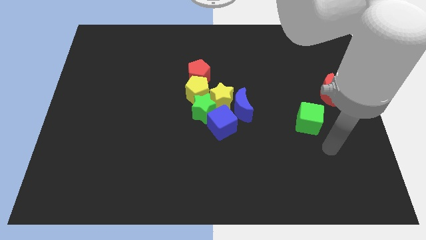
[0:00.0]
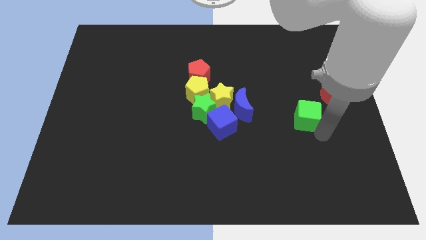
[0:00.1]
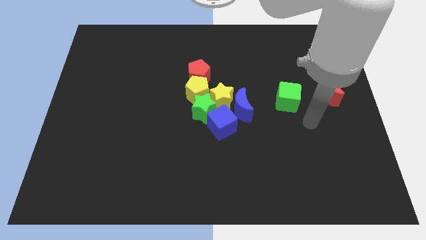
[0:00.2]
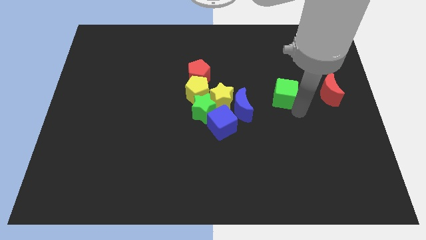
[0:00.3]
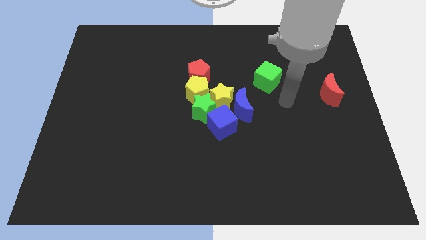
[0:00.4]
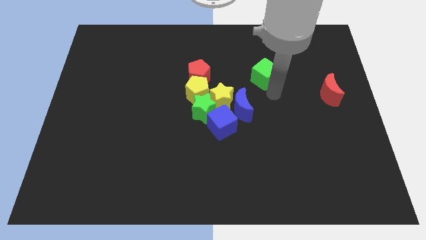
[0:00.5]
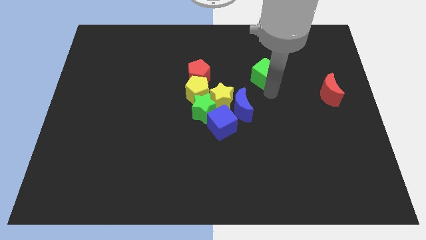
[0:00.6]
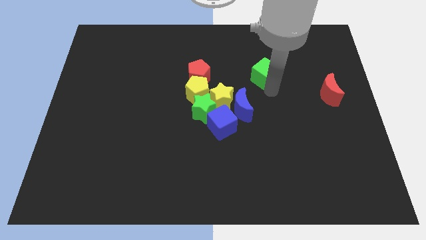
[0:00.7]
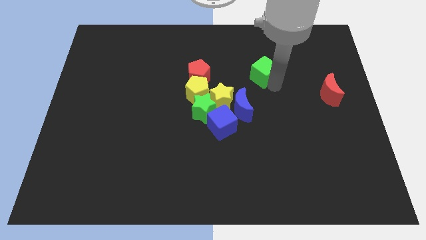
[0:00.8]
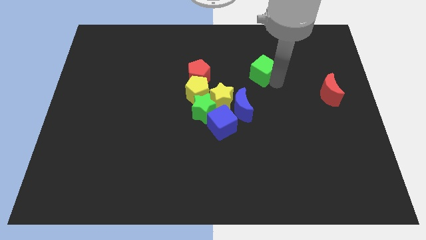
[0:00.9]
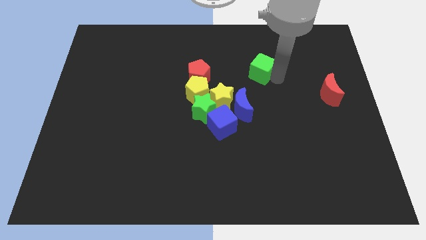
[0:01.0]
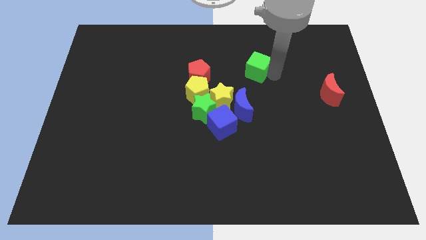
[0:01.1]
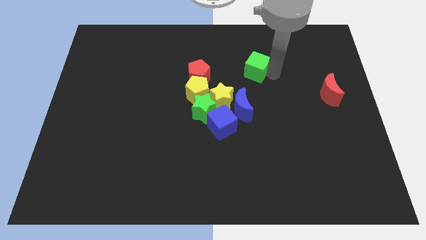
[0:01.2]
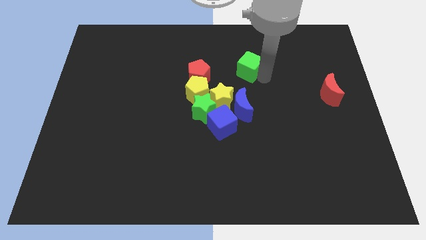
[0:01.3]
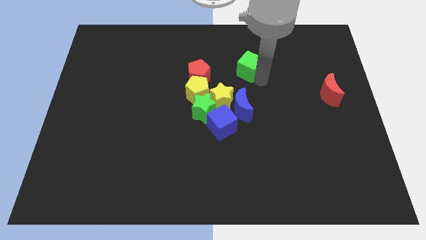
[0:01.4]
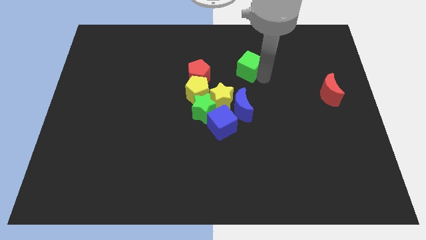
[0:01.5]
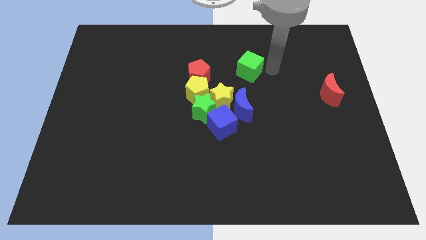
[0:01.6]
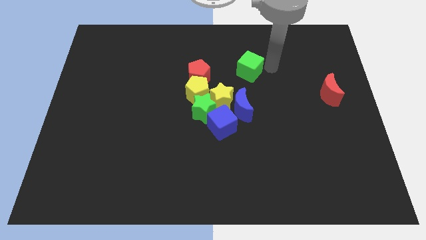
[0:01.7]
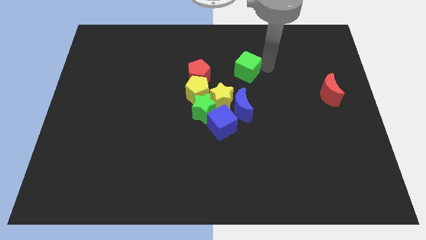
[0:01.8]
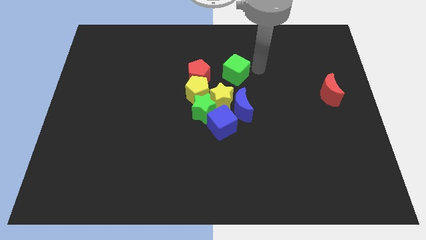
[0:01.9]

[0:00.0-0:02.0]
move the green cube to the center of the board

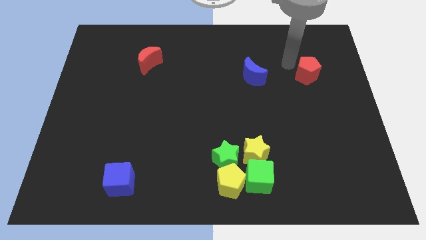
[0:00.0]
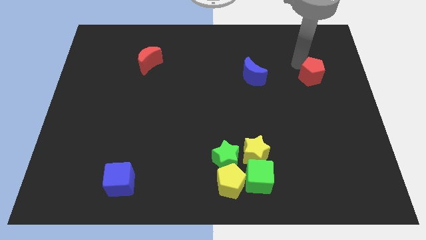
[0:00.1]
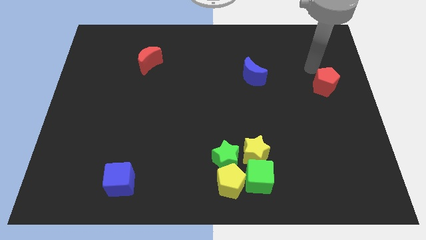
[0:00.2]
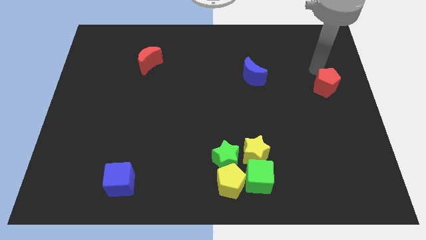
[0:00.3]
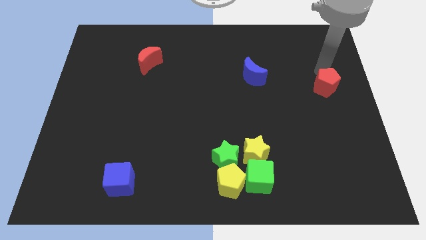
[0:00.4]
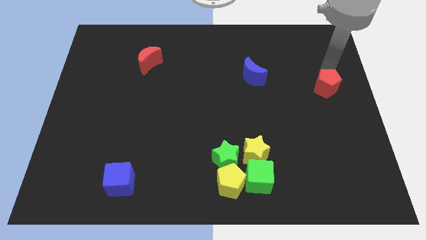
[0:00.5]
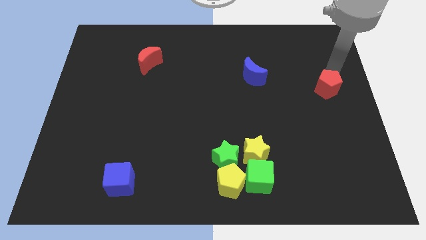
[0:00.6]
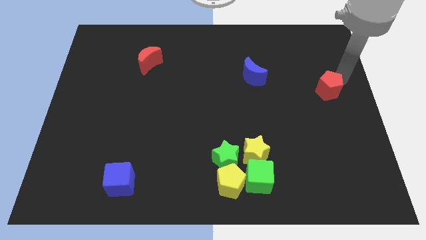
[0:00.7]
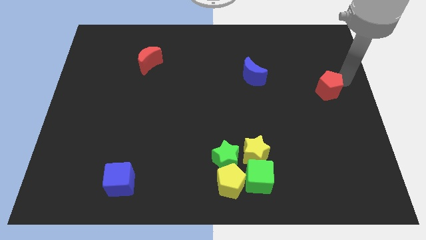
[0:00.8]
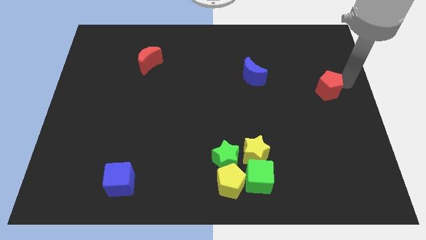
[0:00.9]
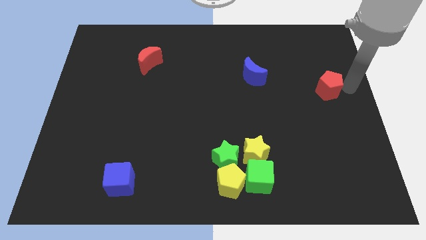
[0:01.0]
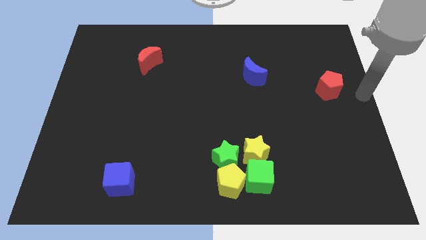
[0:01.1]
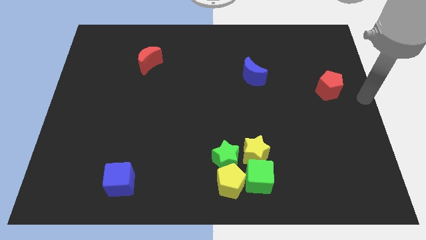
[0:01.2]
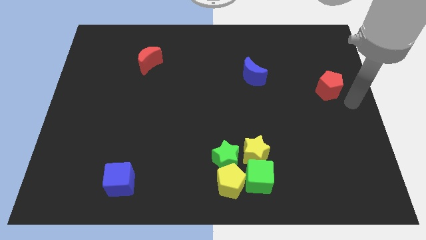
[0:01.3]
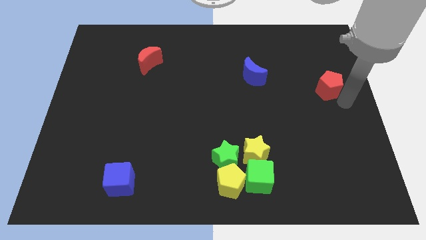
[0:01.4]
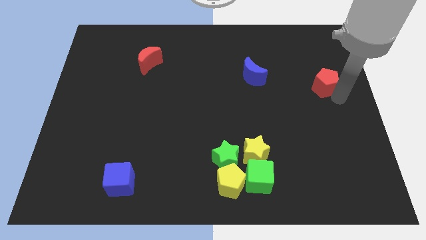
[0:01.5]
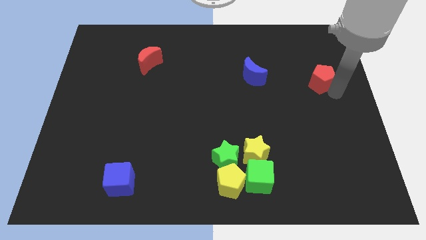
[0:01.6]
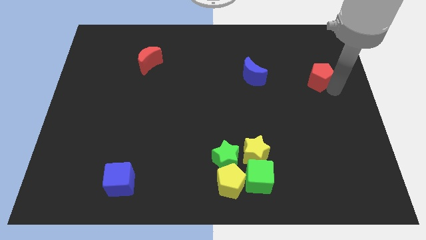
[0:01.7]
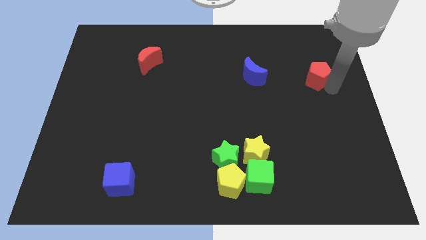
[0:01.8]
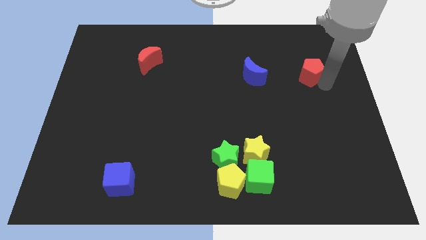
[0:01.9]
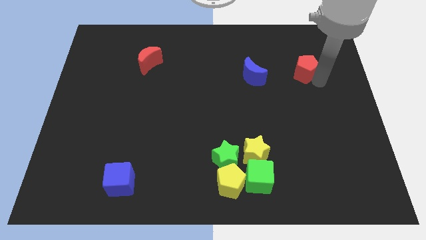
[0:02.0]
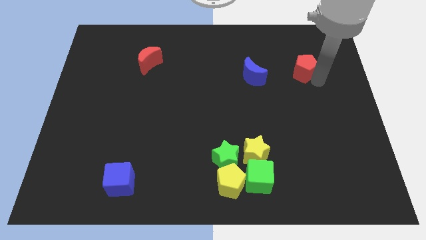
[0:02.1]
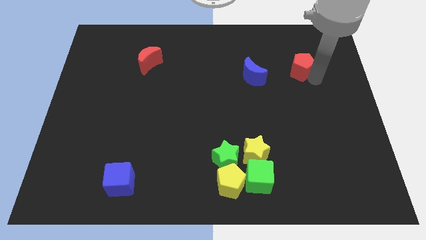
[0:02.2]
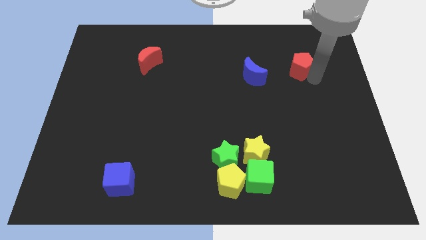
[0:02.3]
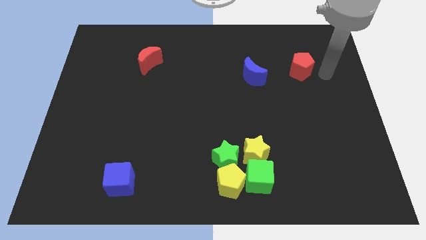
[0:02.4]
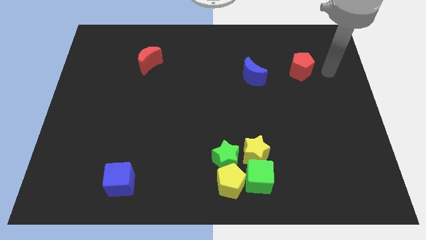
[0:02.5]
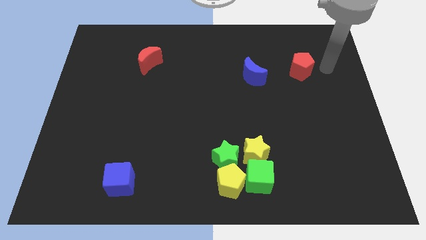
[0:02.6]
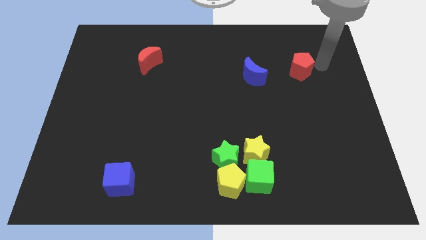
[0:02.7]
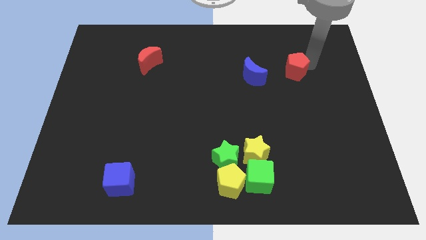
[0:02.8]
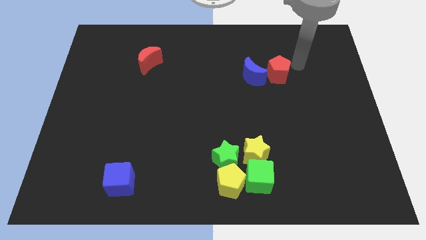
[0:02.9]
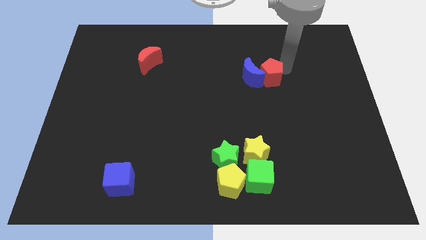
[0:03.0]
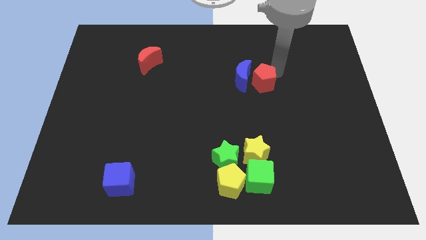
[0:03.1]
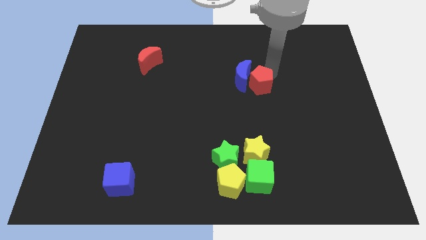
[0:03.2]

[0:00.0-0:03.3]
move the red pentagon to the right side of the blue crescent

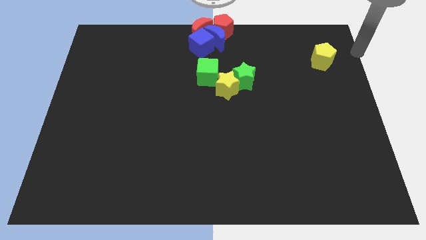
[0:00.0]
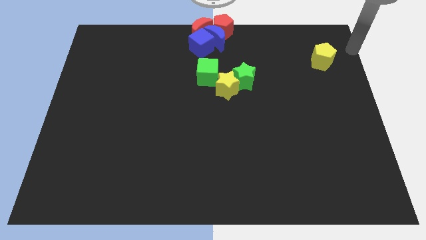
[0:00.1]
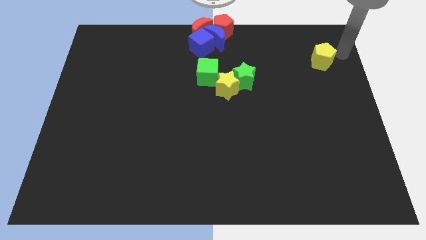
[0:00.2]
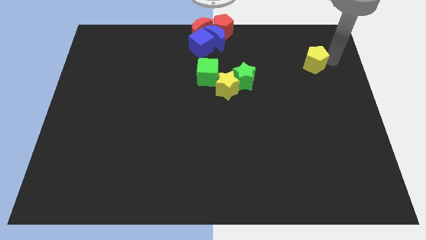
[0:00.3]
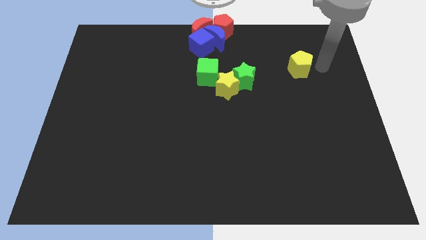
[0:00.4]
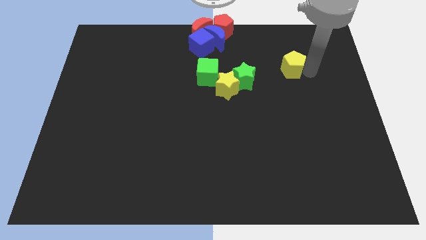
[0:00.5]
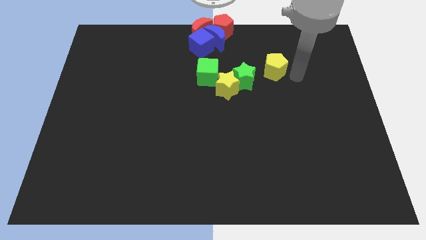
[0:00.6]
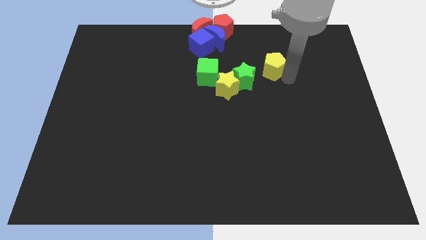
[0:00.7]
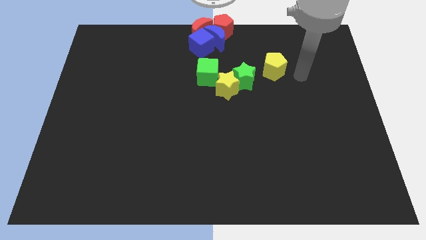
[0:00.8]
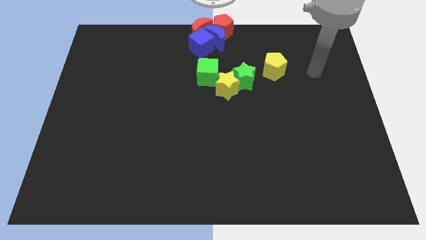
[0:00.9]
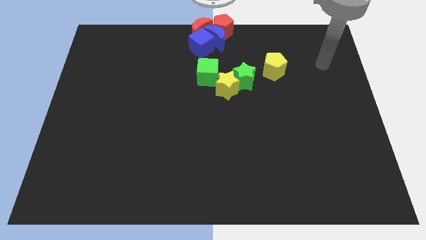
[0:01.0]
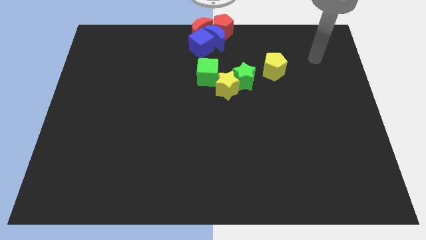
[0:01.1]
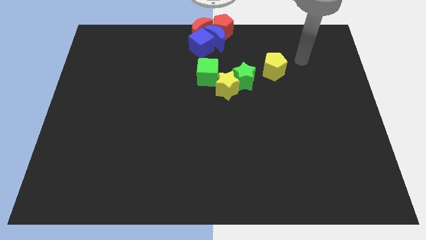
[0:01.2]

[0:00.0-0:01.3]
push the yellow pentagon towards the green star

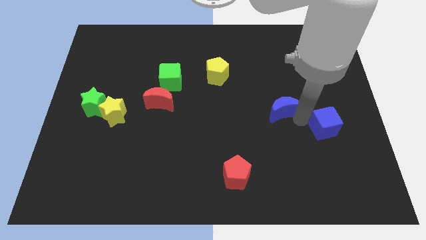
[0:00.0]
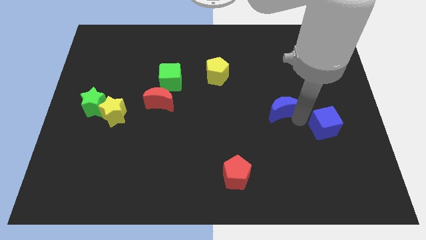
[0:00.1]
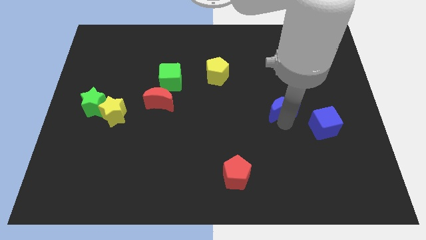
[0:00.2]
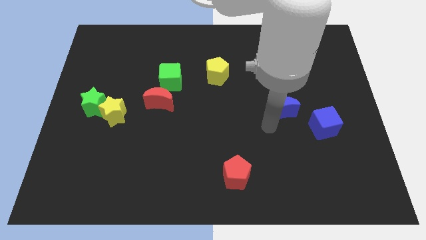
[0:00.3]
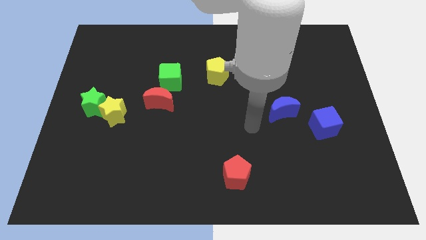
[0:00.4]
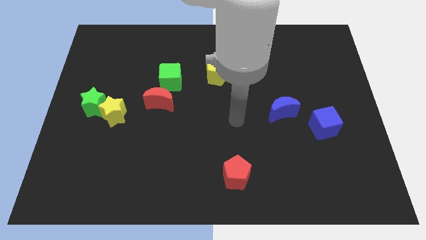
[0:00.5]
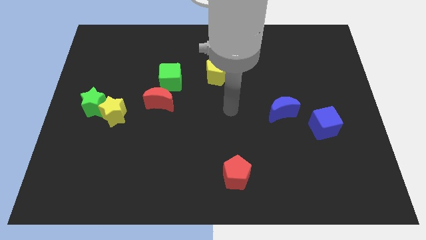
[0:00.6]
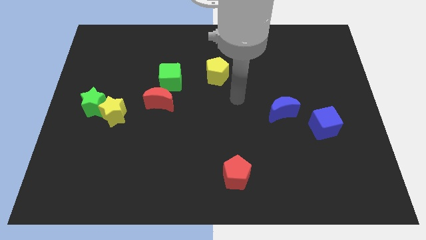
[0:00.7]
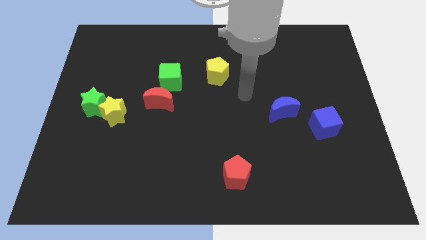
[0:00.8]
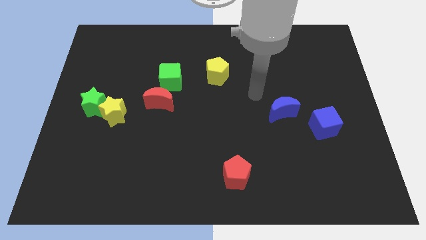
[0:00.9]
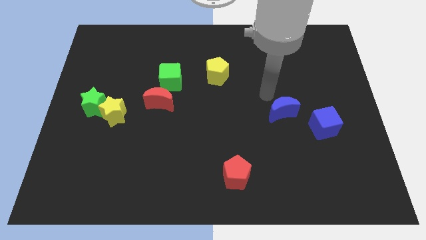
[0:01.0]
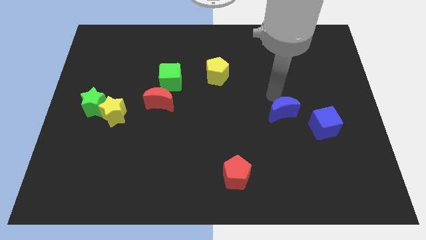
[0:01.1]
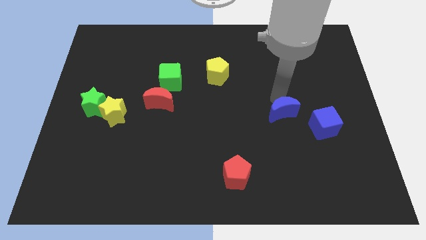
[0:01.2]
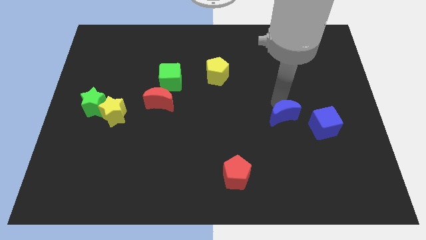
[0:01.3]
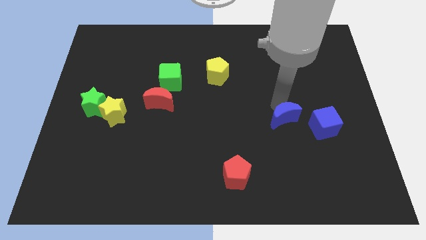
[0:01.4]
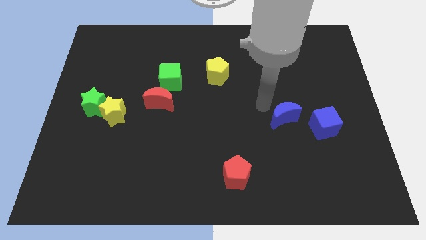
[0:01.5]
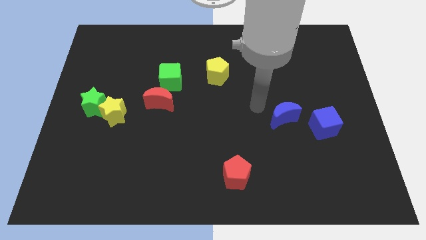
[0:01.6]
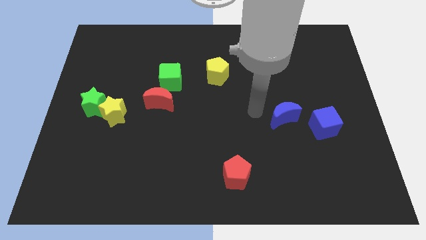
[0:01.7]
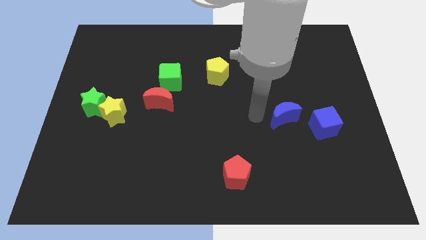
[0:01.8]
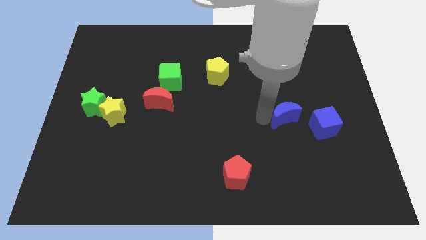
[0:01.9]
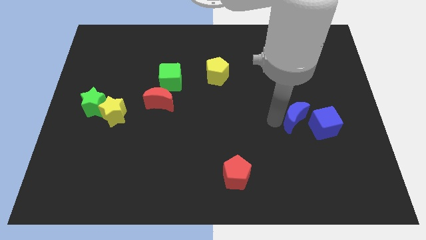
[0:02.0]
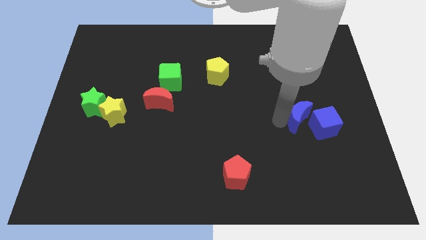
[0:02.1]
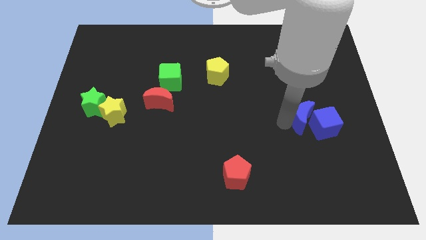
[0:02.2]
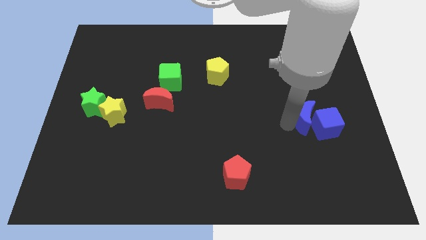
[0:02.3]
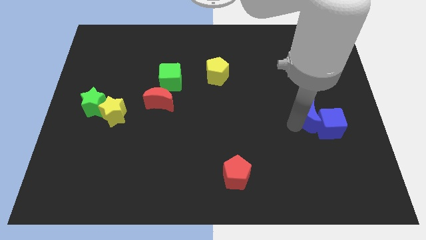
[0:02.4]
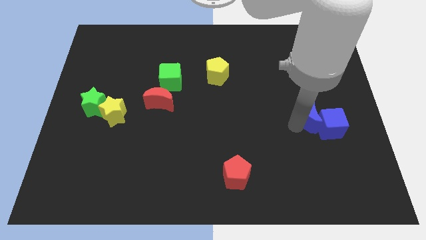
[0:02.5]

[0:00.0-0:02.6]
move the blue crescent into the blue cube
